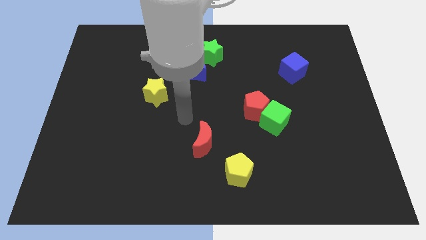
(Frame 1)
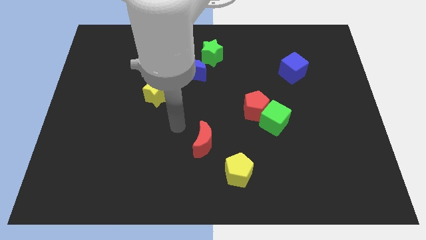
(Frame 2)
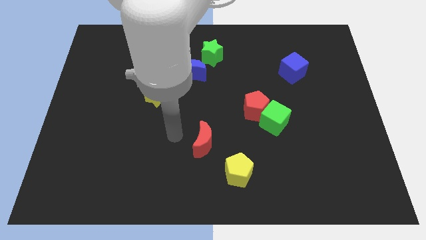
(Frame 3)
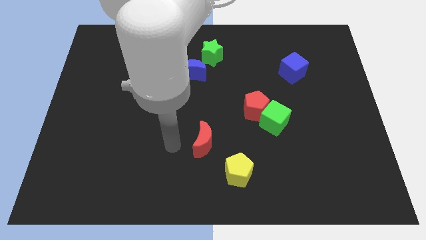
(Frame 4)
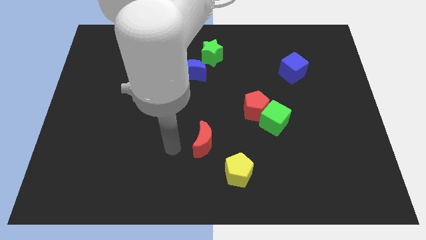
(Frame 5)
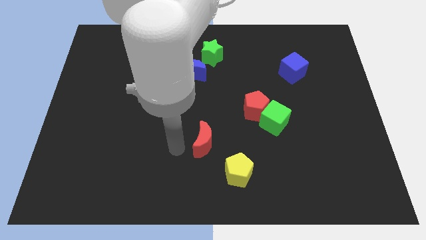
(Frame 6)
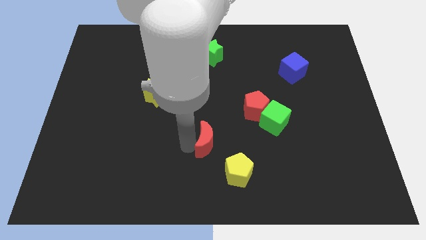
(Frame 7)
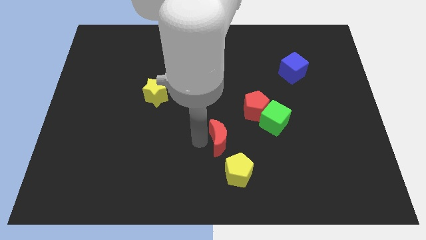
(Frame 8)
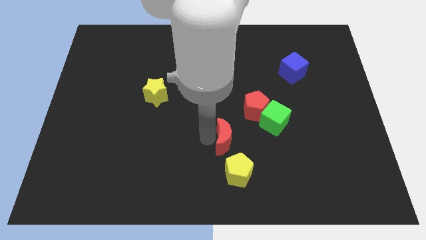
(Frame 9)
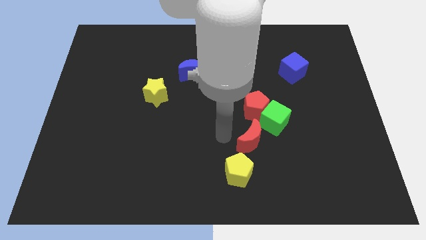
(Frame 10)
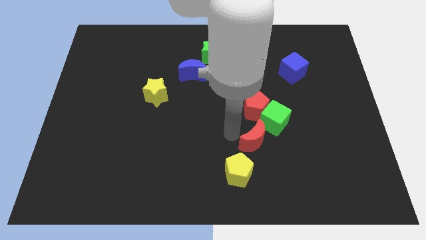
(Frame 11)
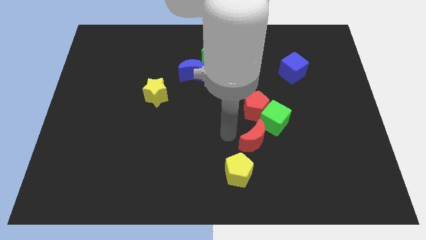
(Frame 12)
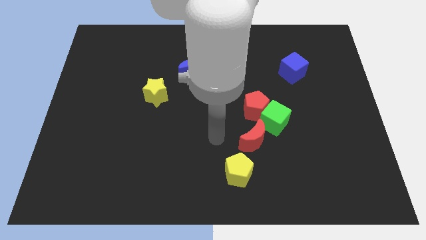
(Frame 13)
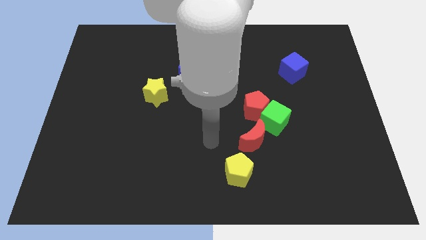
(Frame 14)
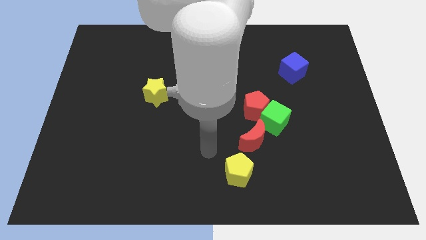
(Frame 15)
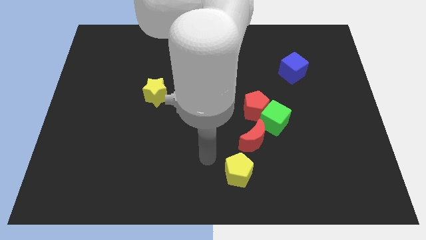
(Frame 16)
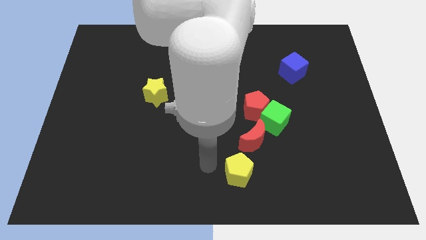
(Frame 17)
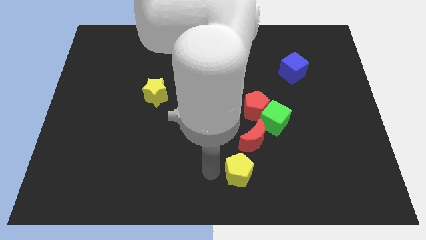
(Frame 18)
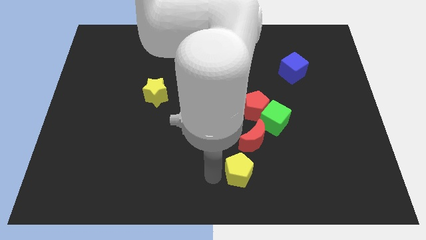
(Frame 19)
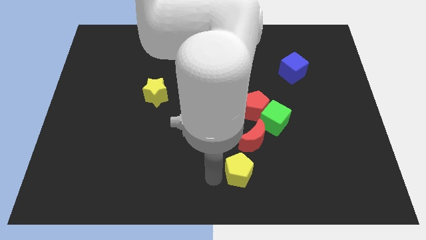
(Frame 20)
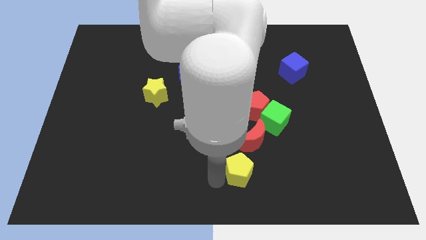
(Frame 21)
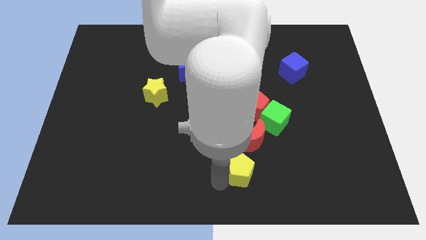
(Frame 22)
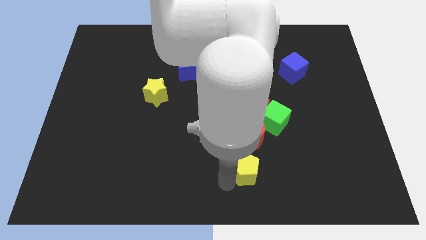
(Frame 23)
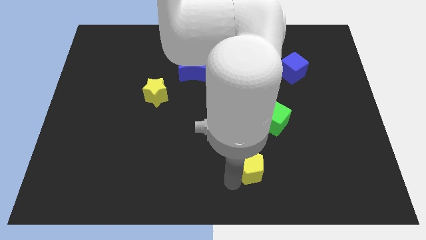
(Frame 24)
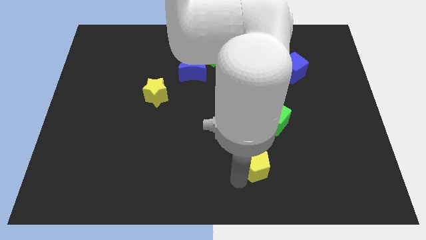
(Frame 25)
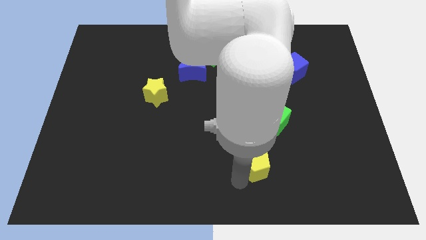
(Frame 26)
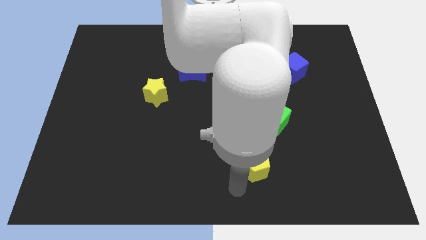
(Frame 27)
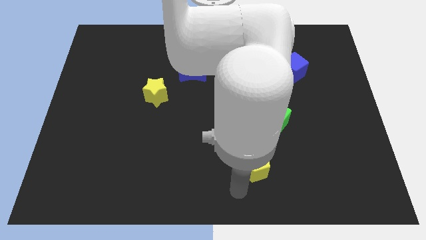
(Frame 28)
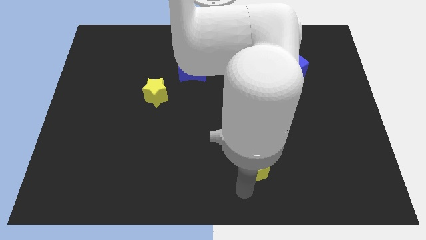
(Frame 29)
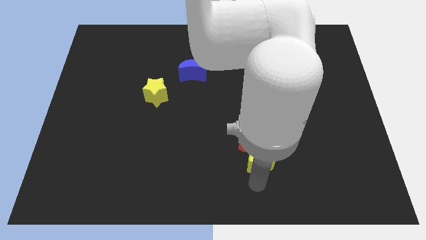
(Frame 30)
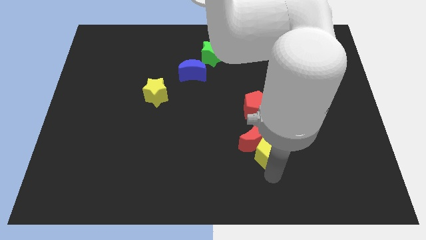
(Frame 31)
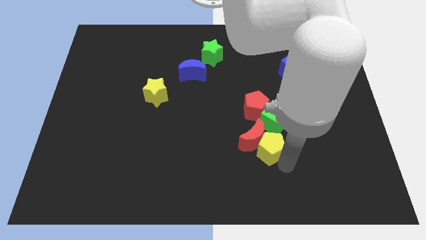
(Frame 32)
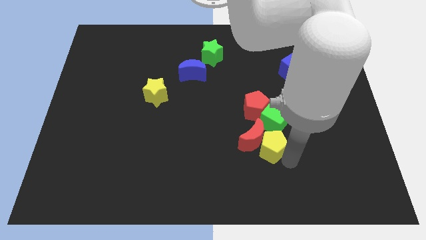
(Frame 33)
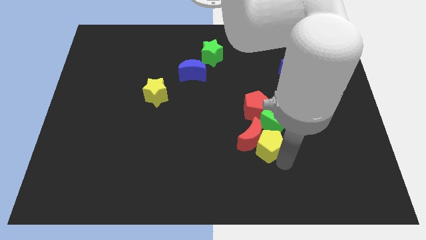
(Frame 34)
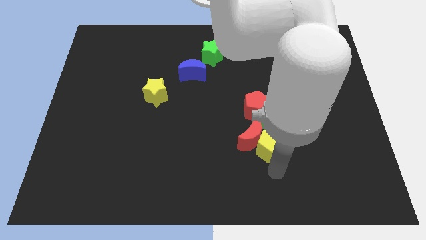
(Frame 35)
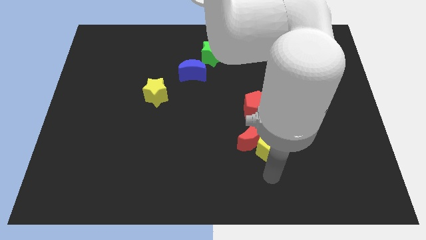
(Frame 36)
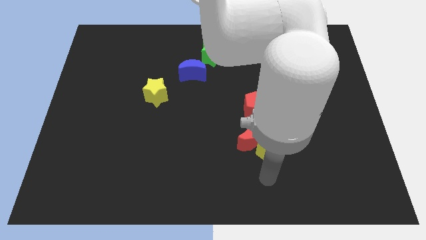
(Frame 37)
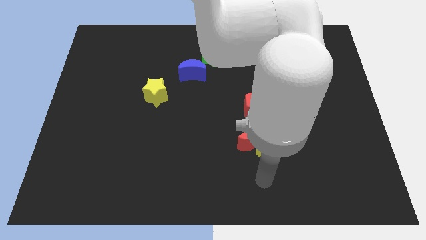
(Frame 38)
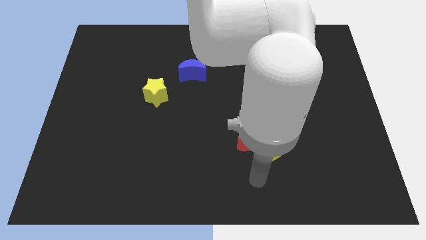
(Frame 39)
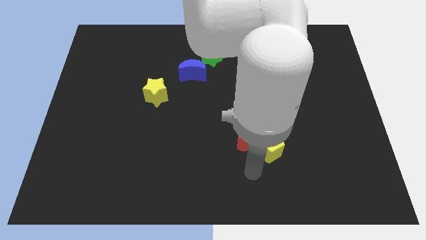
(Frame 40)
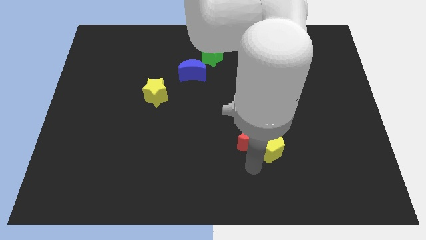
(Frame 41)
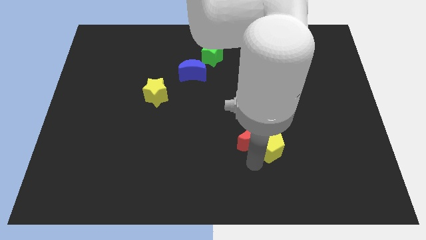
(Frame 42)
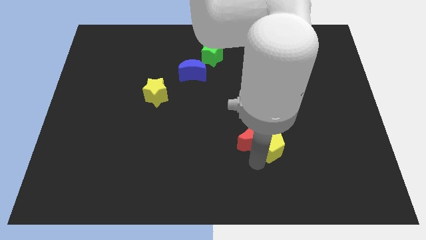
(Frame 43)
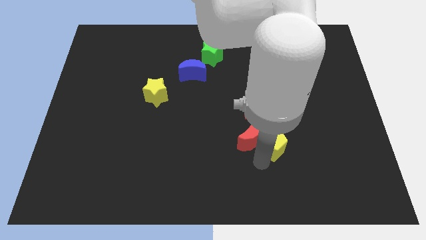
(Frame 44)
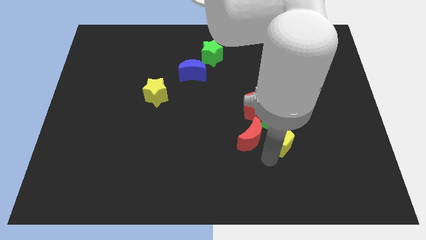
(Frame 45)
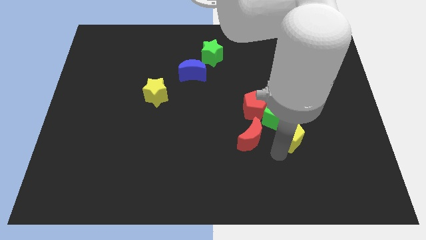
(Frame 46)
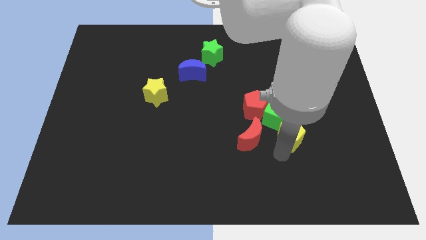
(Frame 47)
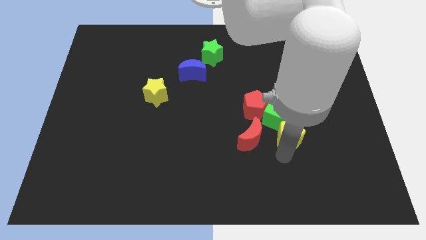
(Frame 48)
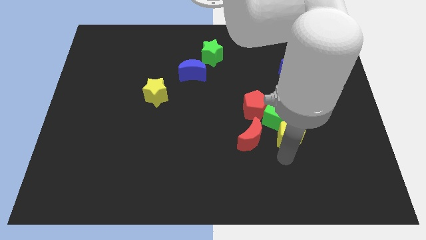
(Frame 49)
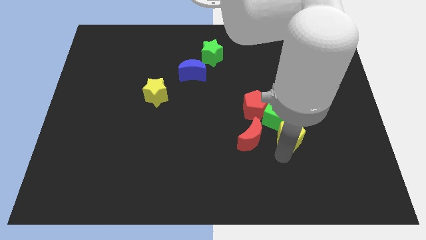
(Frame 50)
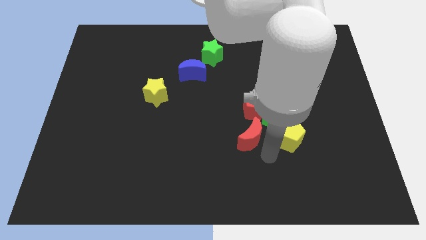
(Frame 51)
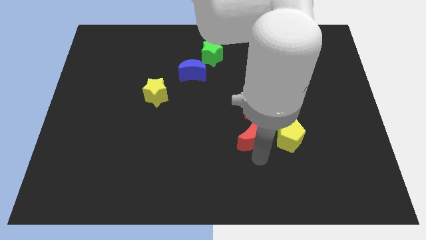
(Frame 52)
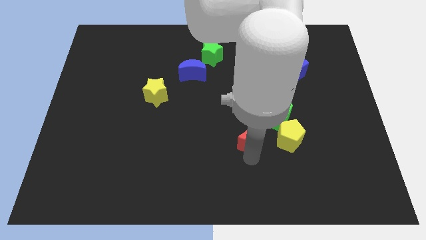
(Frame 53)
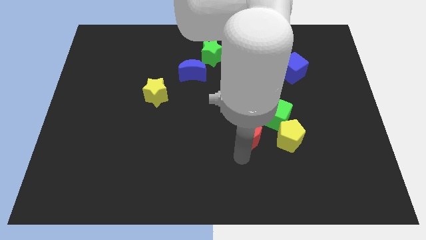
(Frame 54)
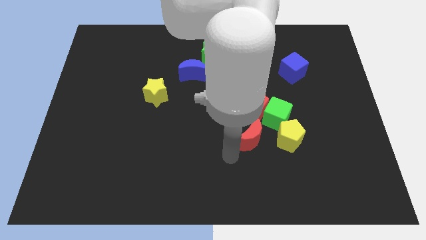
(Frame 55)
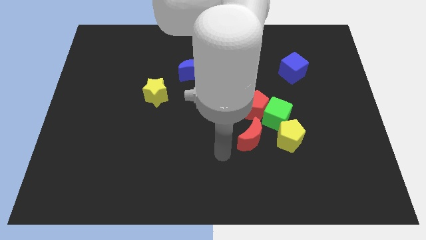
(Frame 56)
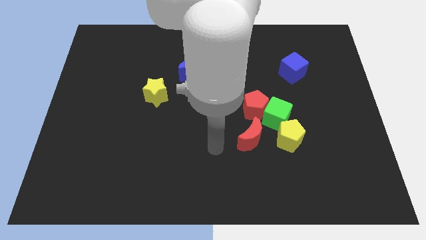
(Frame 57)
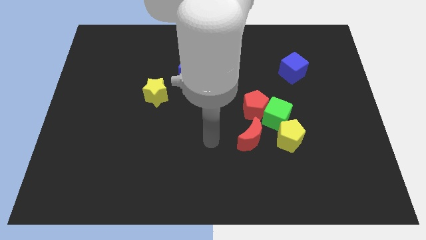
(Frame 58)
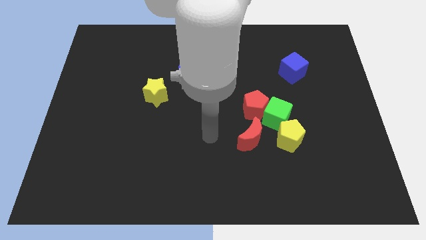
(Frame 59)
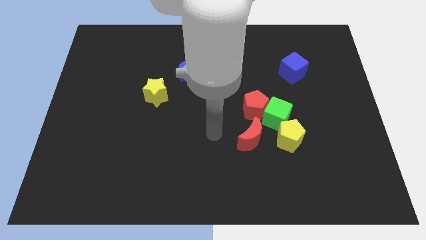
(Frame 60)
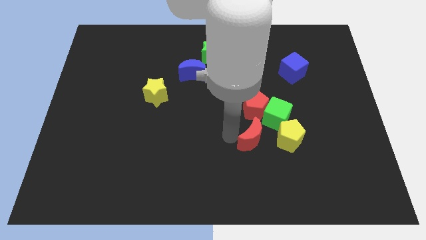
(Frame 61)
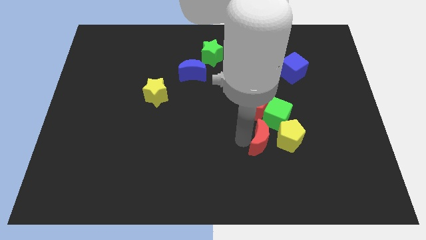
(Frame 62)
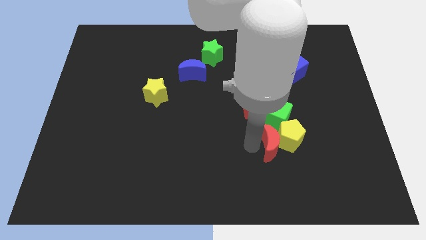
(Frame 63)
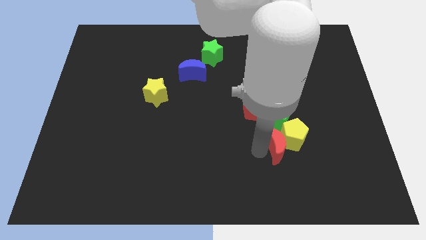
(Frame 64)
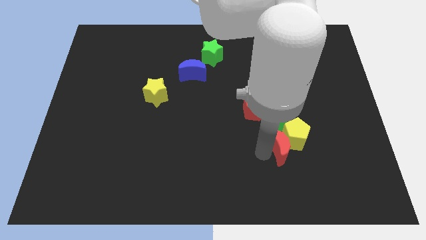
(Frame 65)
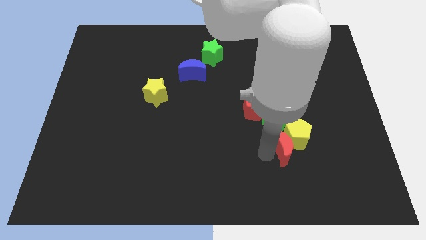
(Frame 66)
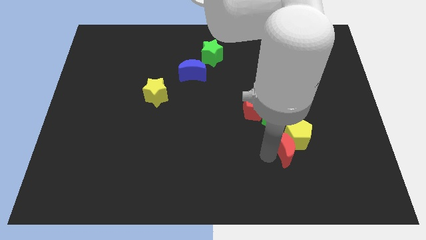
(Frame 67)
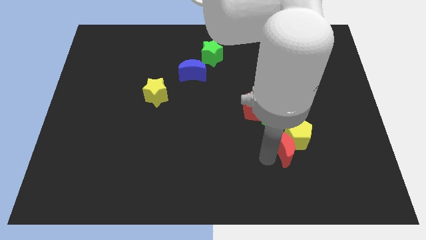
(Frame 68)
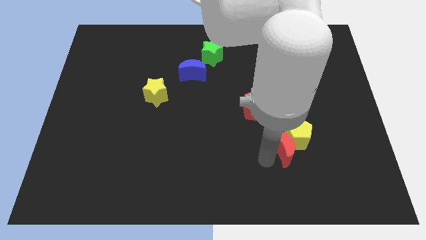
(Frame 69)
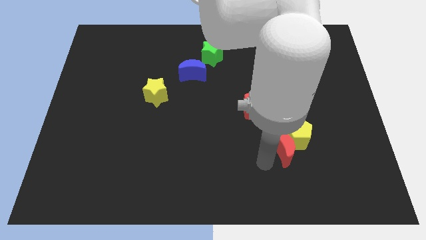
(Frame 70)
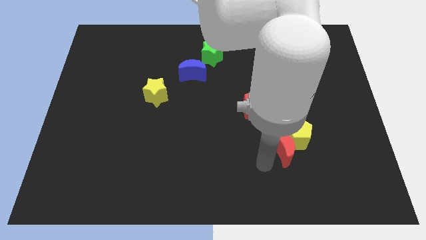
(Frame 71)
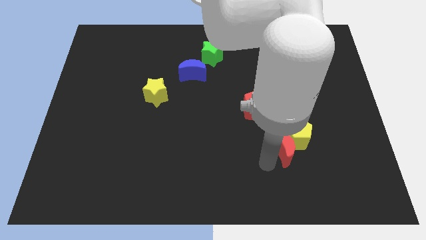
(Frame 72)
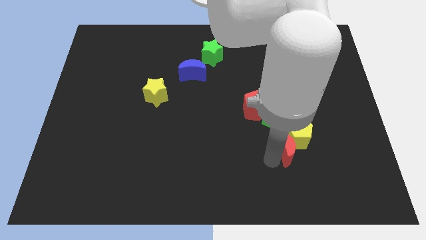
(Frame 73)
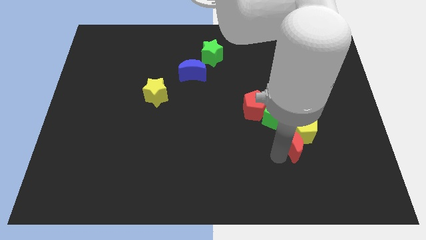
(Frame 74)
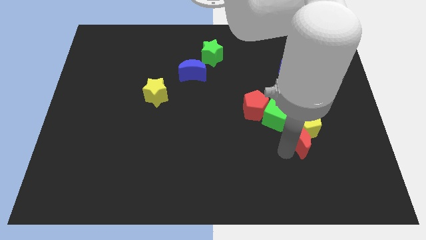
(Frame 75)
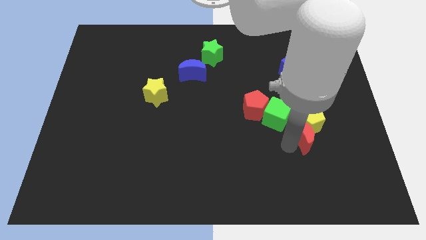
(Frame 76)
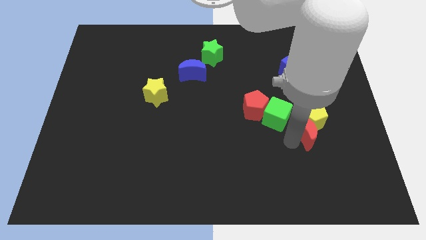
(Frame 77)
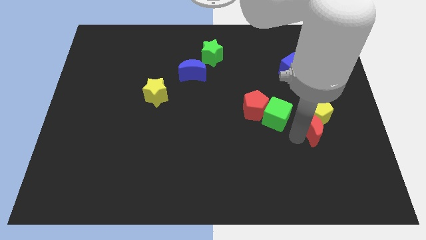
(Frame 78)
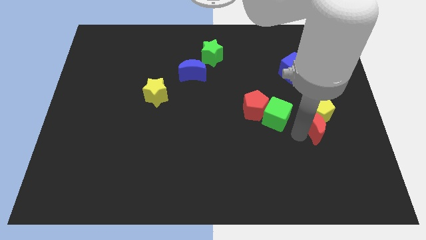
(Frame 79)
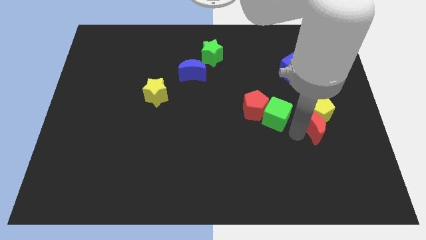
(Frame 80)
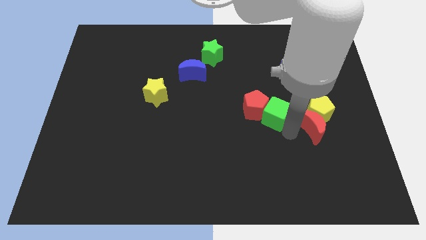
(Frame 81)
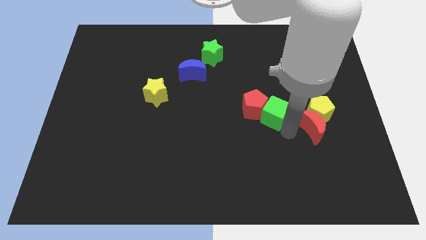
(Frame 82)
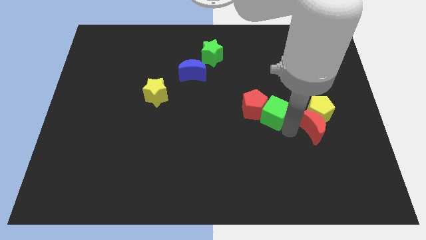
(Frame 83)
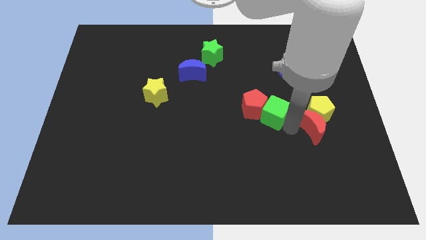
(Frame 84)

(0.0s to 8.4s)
push the red crescent into yellow pentagon

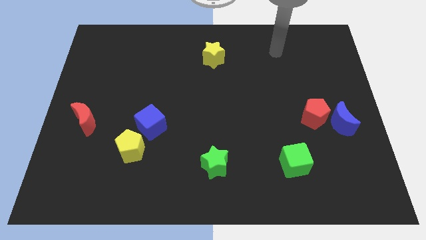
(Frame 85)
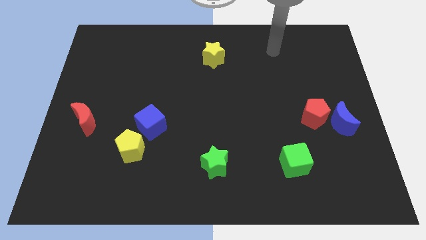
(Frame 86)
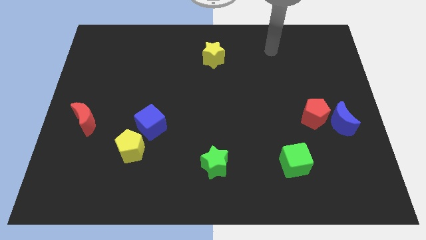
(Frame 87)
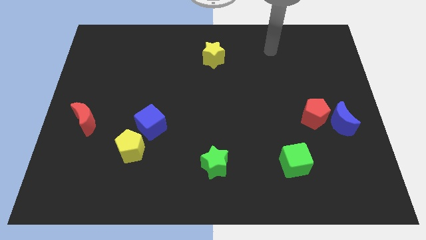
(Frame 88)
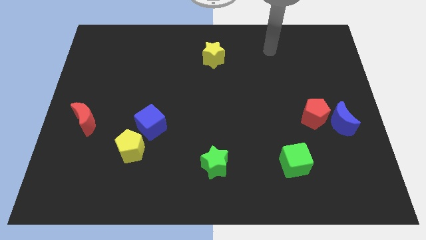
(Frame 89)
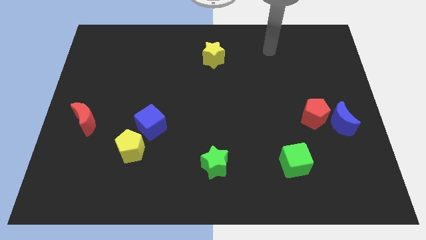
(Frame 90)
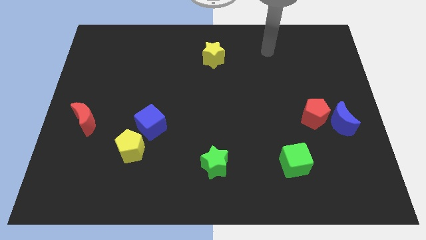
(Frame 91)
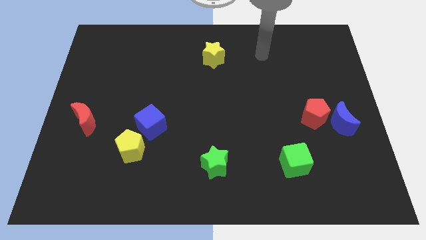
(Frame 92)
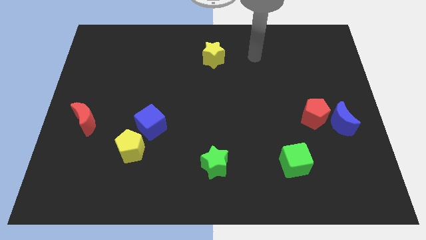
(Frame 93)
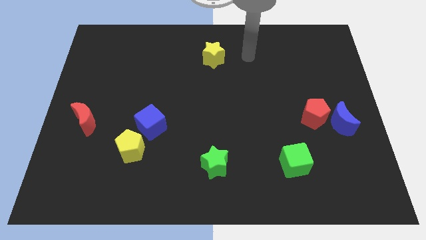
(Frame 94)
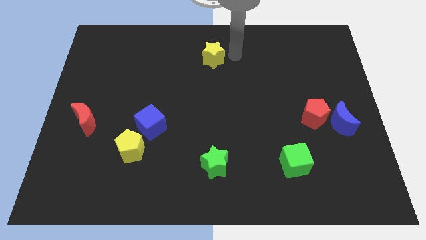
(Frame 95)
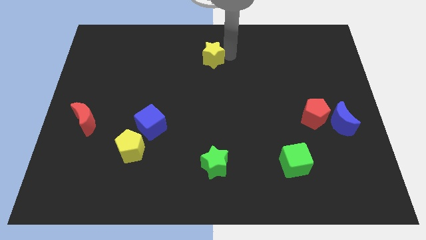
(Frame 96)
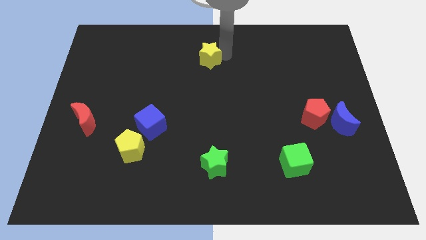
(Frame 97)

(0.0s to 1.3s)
touch the right side of the yellow star
